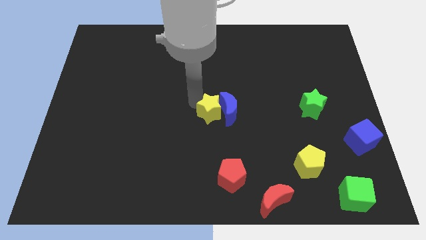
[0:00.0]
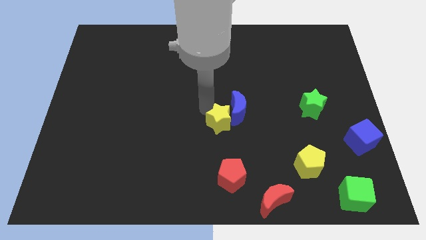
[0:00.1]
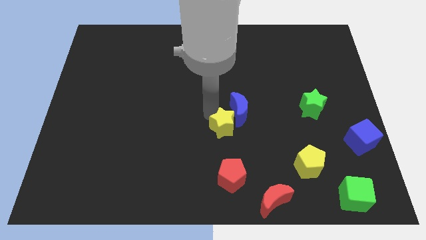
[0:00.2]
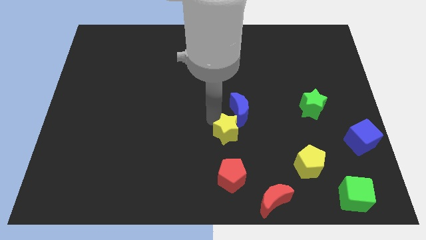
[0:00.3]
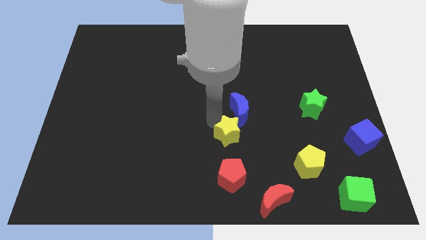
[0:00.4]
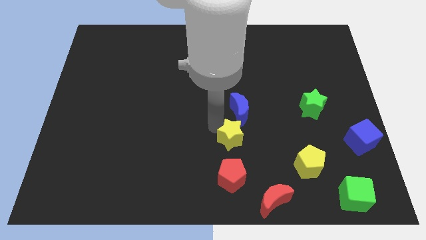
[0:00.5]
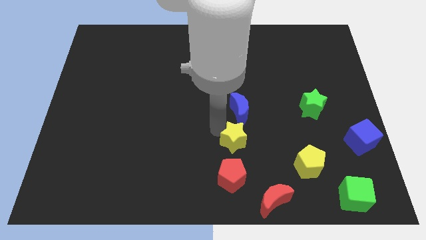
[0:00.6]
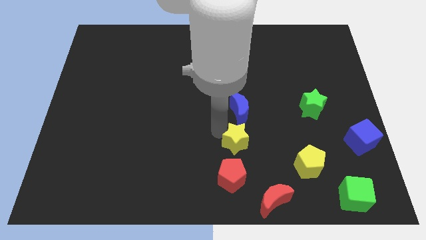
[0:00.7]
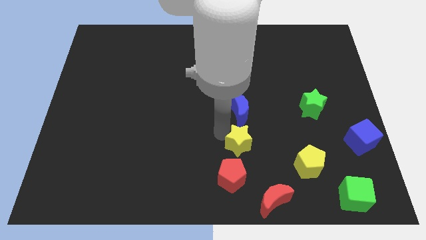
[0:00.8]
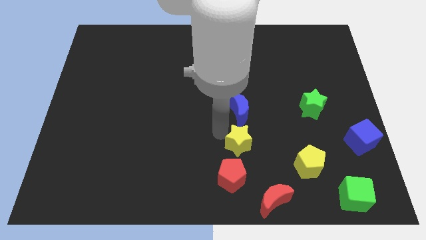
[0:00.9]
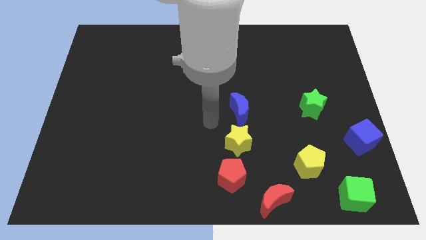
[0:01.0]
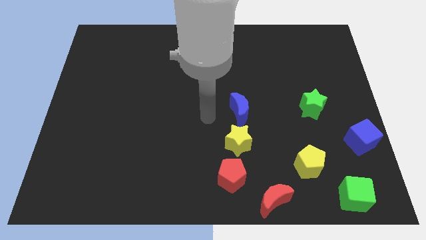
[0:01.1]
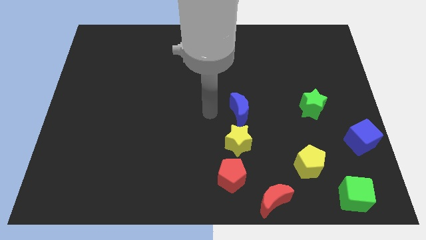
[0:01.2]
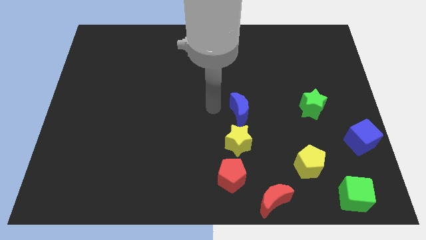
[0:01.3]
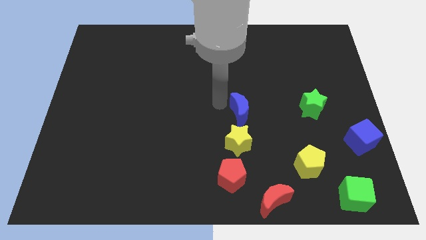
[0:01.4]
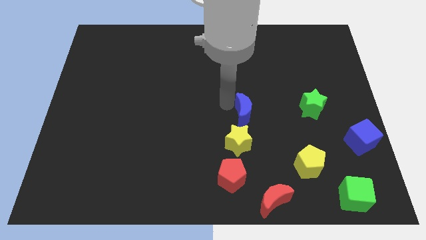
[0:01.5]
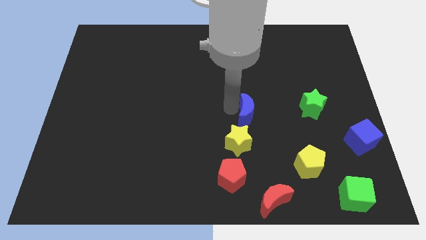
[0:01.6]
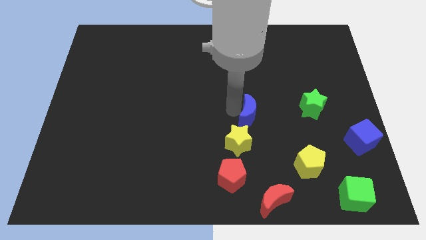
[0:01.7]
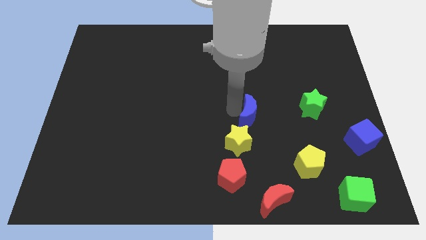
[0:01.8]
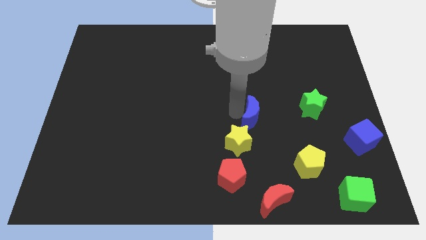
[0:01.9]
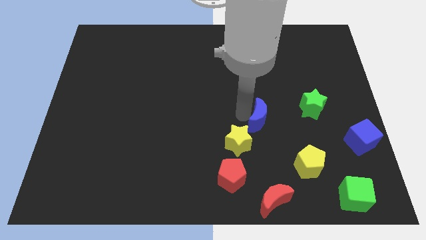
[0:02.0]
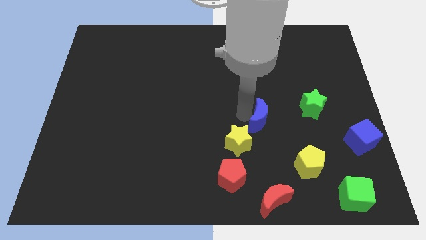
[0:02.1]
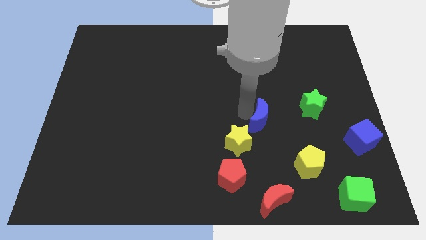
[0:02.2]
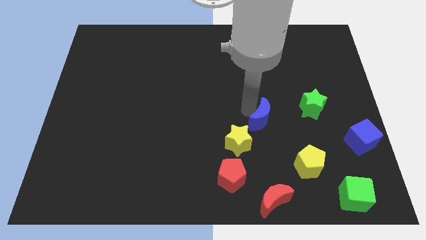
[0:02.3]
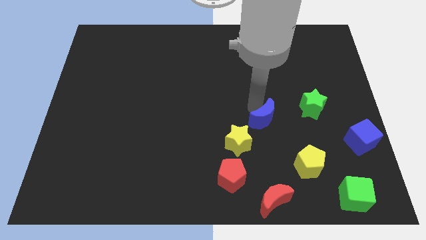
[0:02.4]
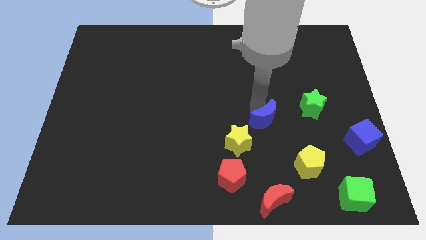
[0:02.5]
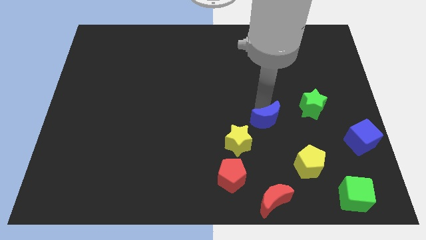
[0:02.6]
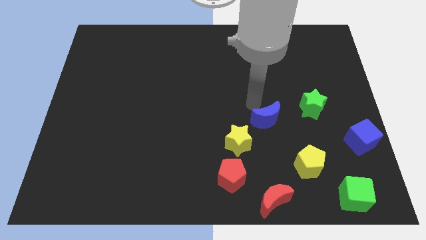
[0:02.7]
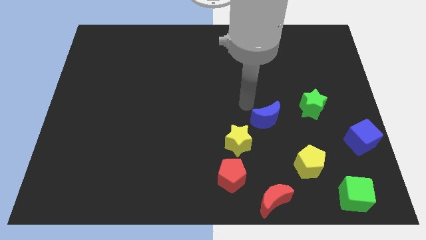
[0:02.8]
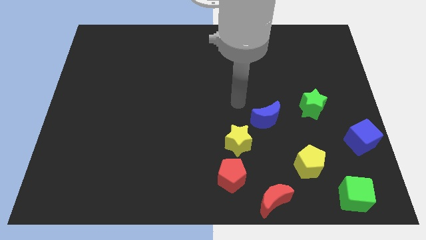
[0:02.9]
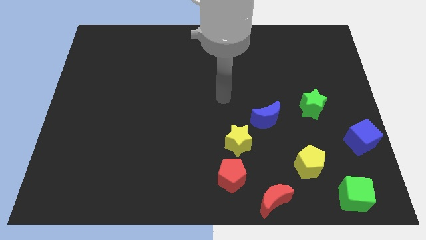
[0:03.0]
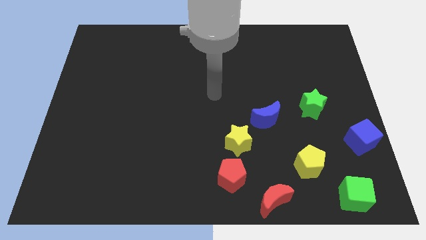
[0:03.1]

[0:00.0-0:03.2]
move the blue moon diagonal to the yellow pentagon

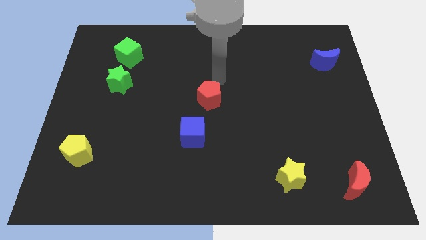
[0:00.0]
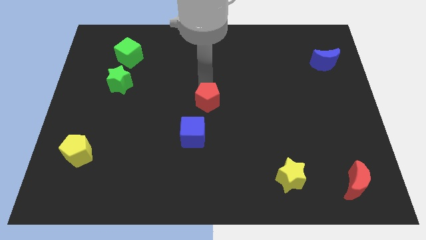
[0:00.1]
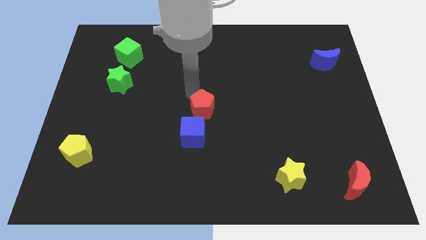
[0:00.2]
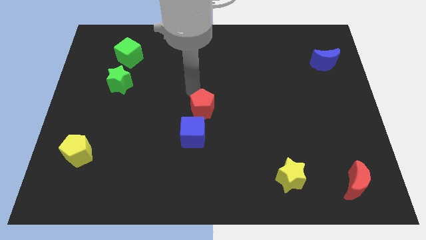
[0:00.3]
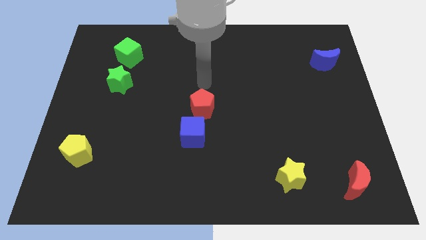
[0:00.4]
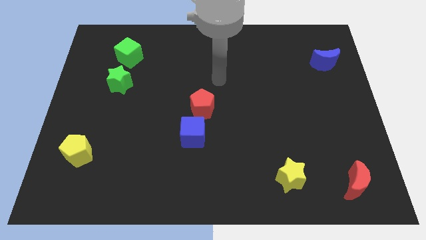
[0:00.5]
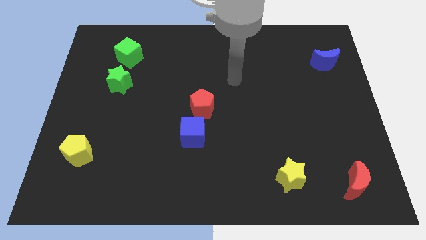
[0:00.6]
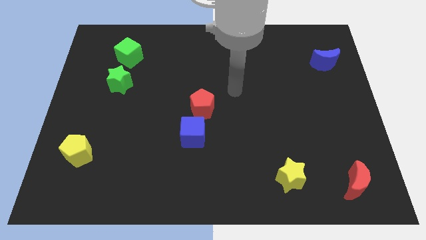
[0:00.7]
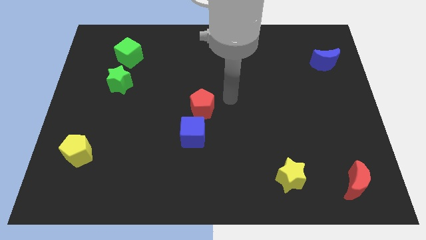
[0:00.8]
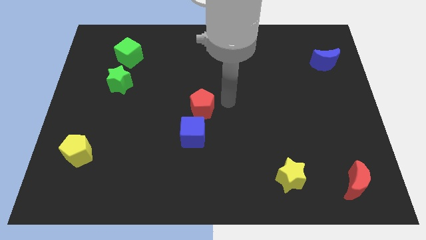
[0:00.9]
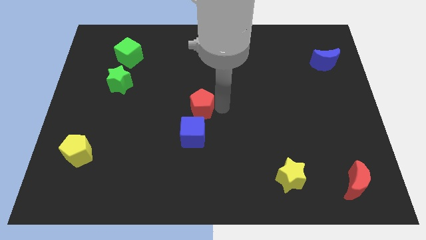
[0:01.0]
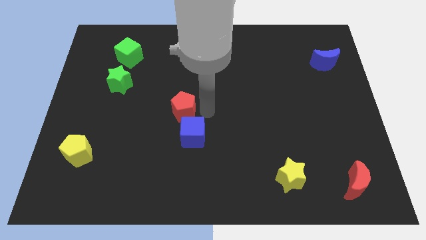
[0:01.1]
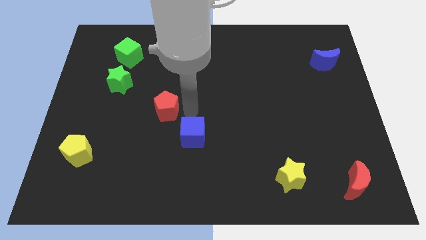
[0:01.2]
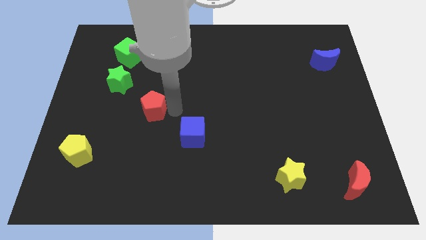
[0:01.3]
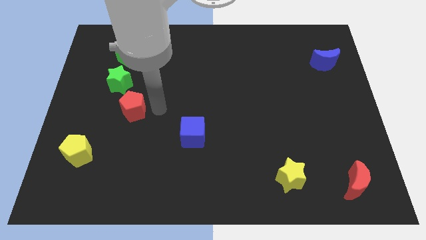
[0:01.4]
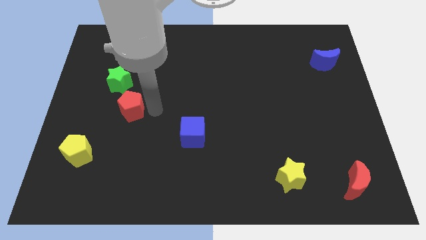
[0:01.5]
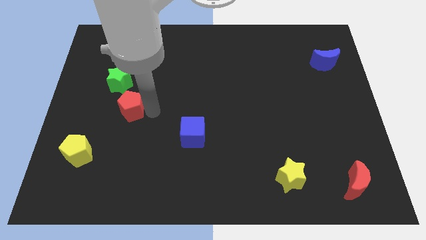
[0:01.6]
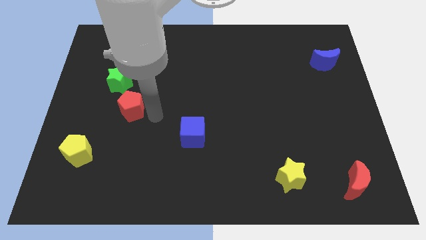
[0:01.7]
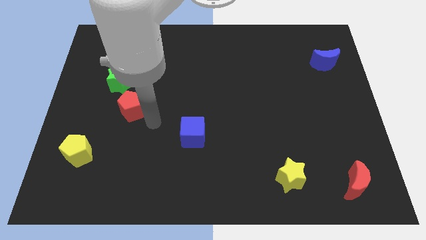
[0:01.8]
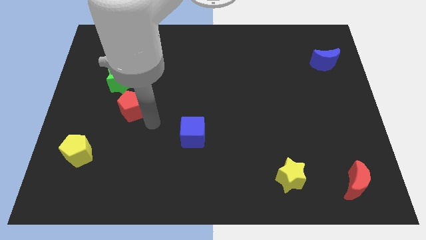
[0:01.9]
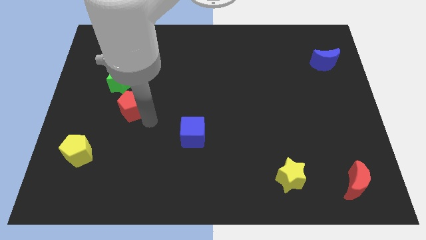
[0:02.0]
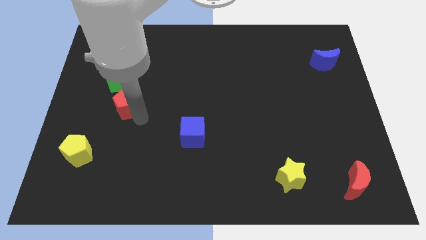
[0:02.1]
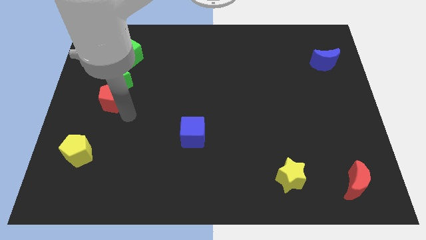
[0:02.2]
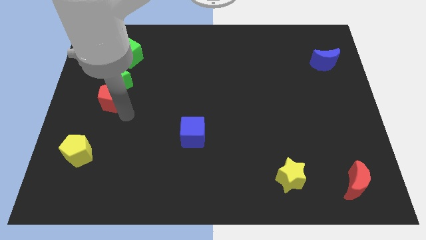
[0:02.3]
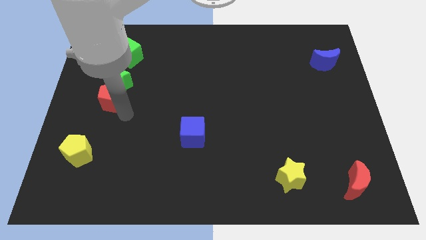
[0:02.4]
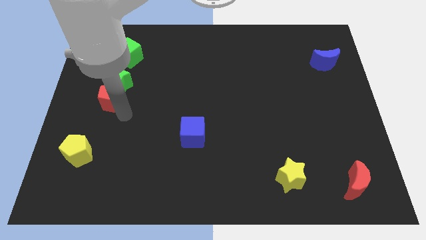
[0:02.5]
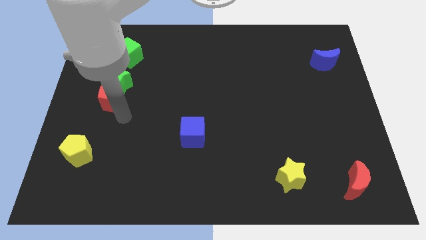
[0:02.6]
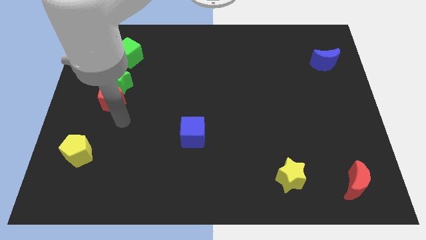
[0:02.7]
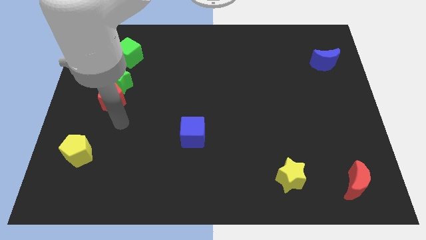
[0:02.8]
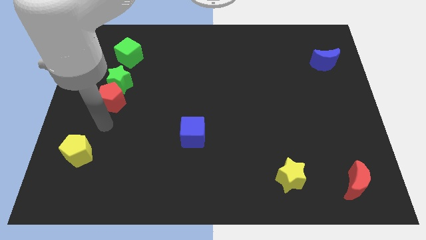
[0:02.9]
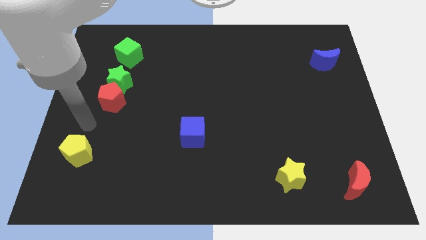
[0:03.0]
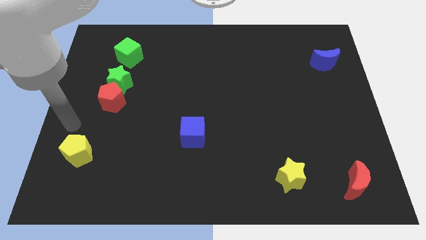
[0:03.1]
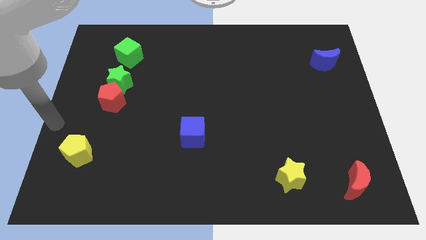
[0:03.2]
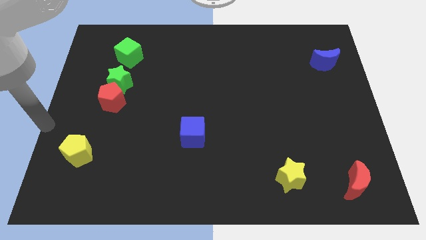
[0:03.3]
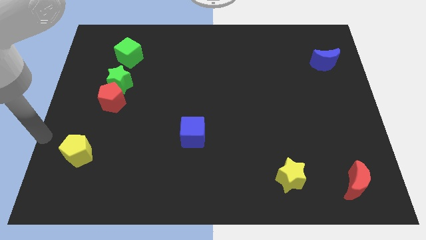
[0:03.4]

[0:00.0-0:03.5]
place the red pentagon below the green star

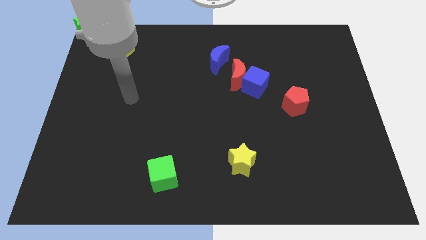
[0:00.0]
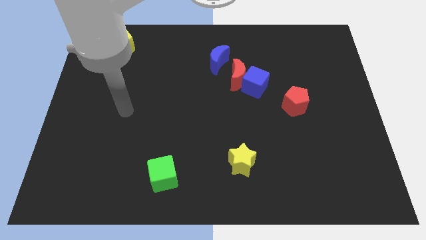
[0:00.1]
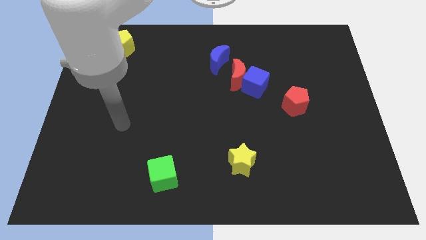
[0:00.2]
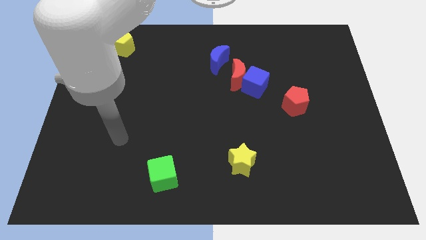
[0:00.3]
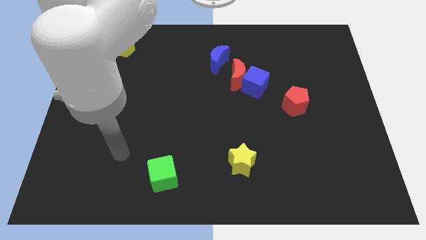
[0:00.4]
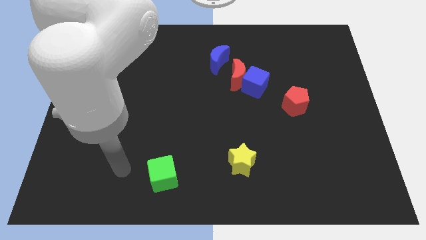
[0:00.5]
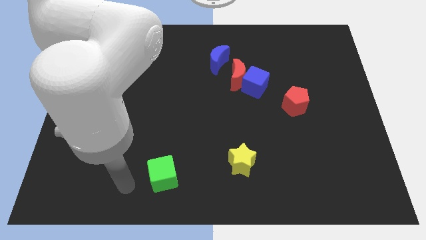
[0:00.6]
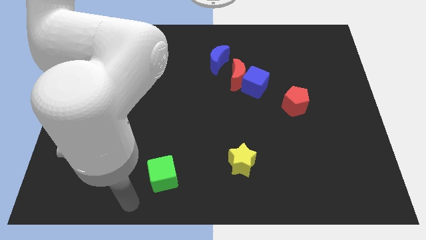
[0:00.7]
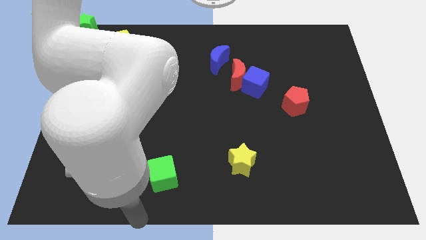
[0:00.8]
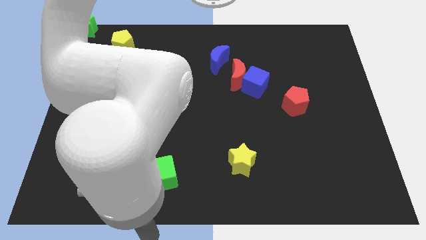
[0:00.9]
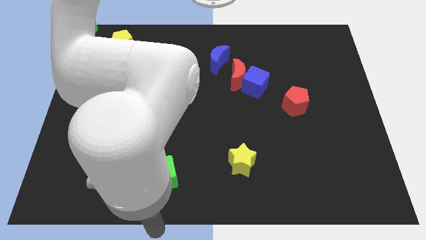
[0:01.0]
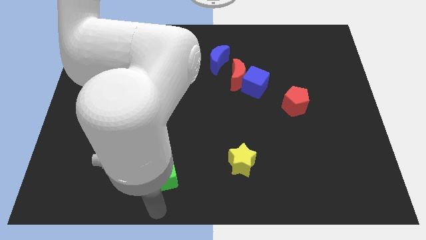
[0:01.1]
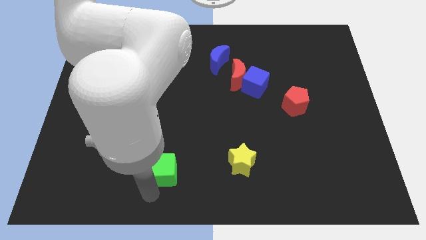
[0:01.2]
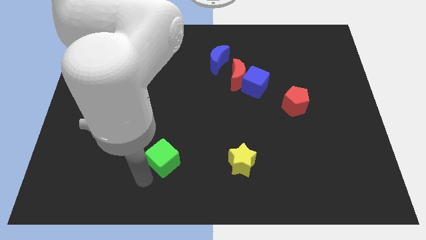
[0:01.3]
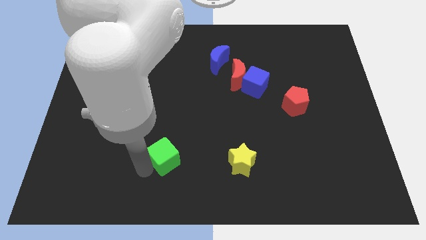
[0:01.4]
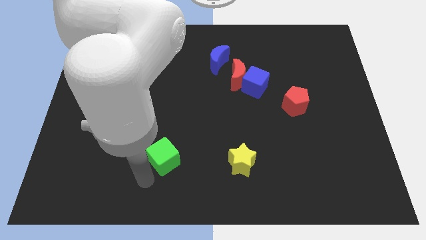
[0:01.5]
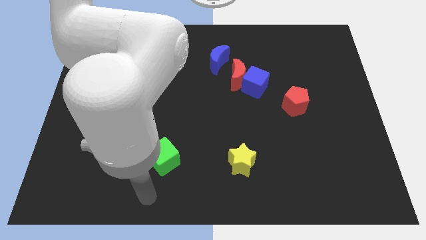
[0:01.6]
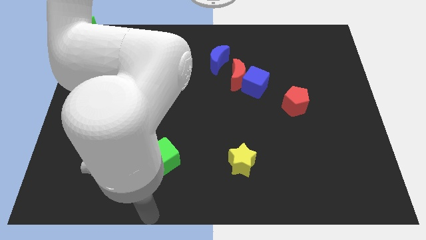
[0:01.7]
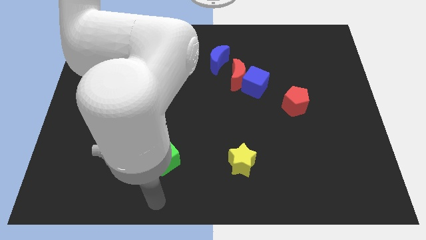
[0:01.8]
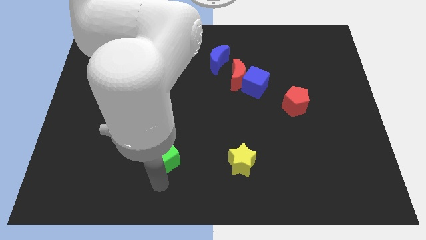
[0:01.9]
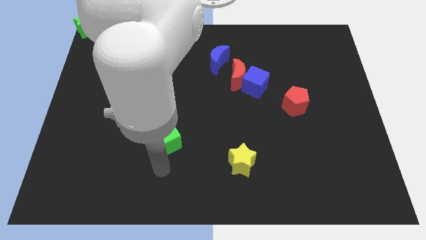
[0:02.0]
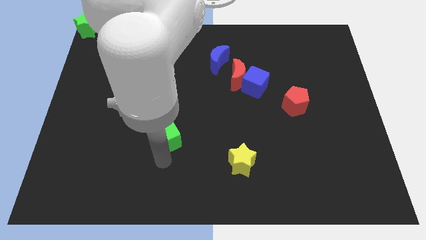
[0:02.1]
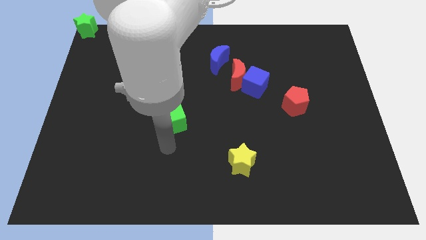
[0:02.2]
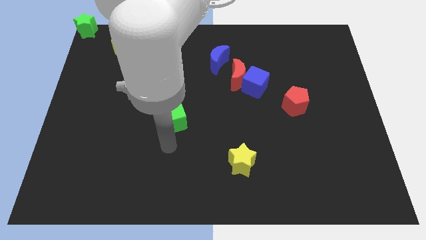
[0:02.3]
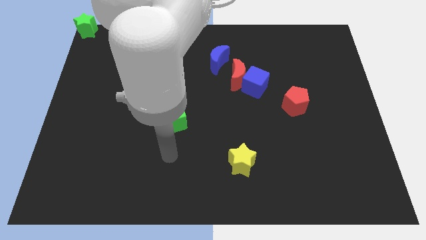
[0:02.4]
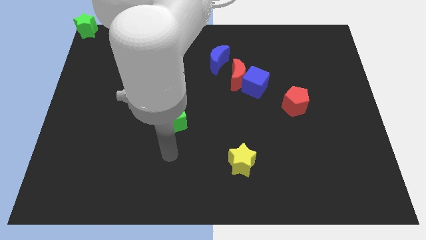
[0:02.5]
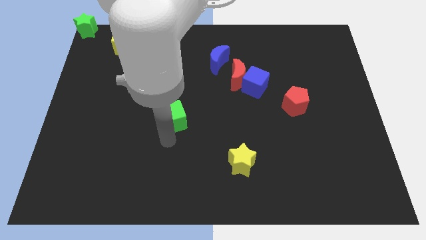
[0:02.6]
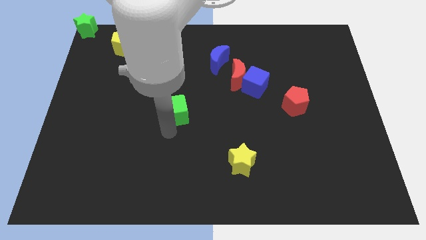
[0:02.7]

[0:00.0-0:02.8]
slightly move the green cube up
